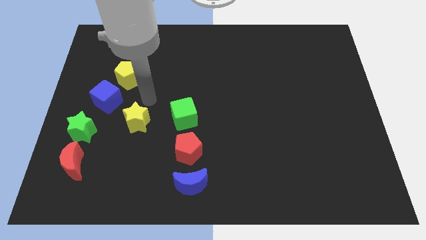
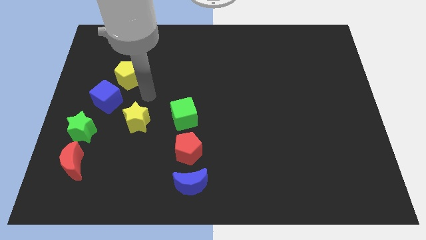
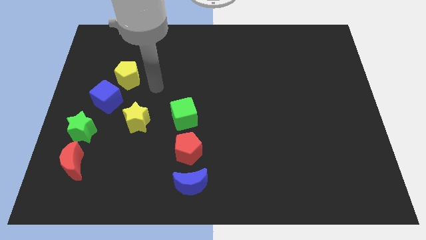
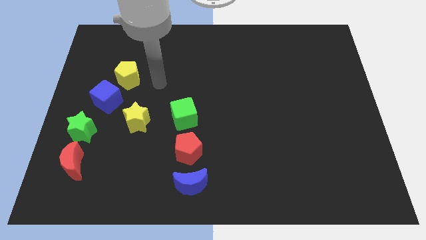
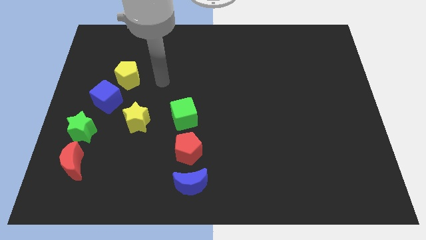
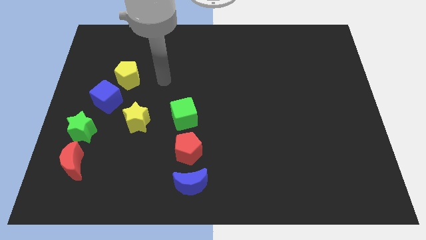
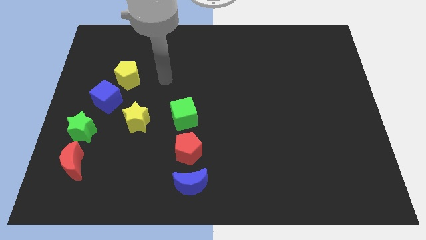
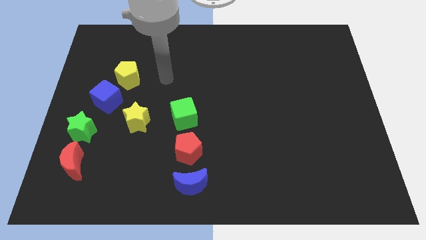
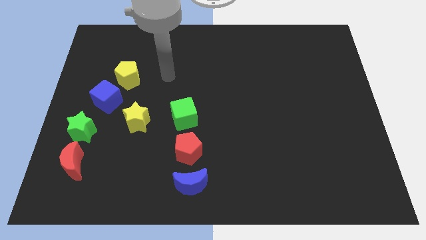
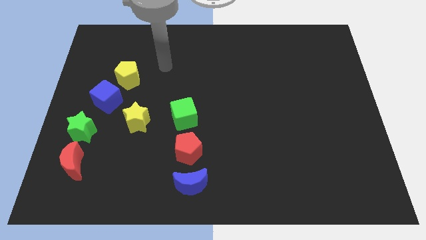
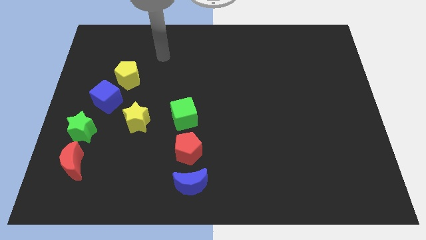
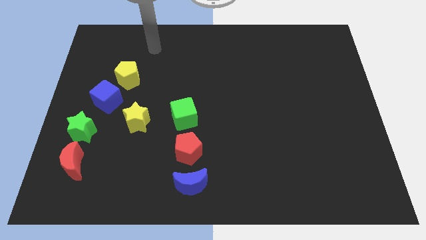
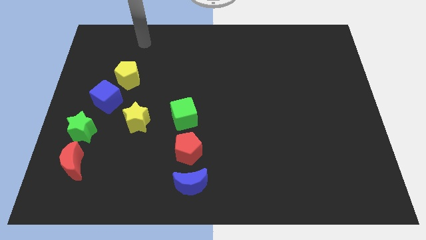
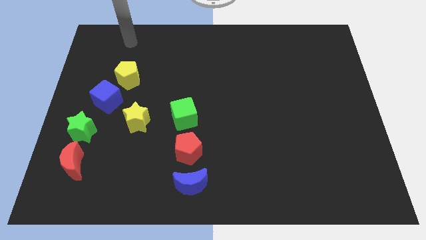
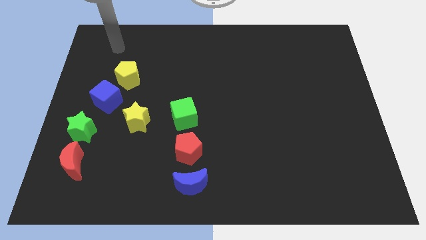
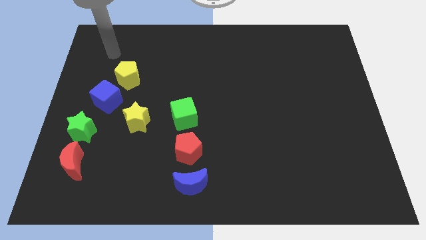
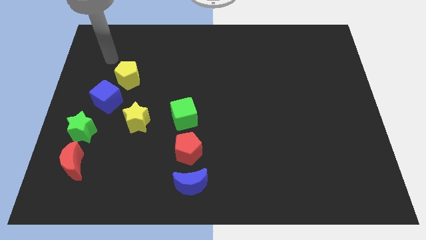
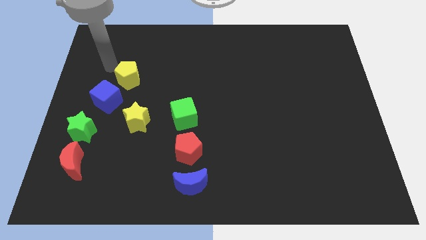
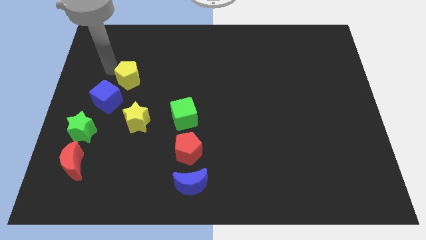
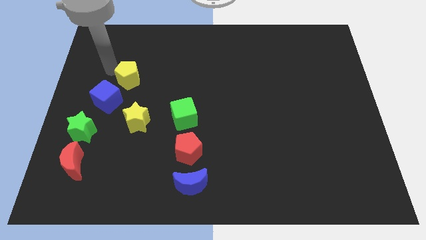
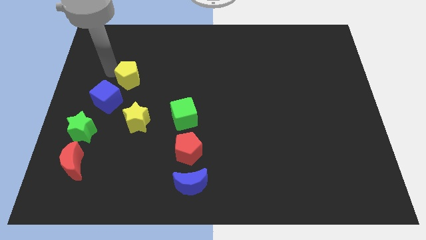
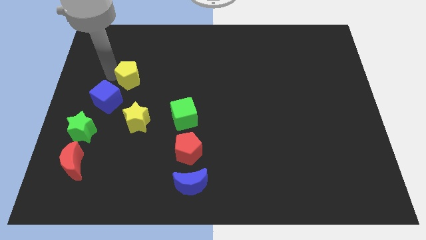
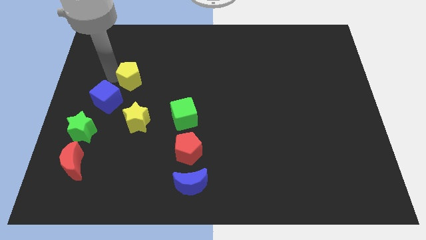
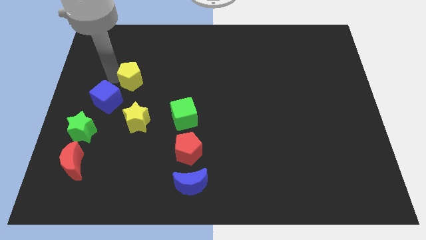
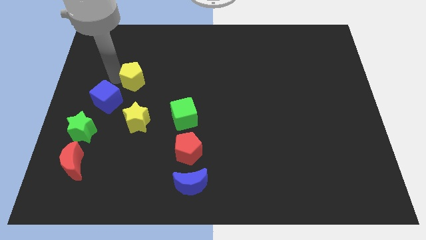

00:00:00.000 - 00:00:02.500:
slightly push the yellow pentagon towards the right side of the board

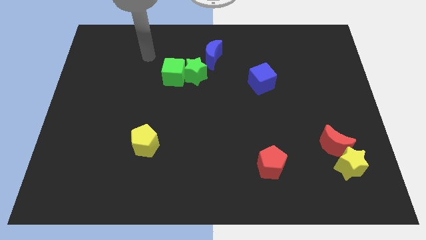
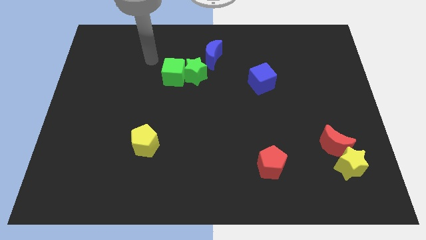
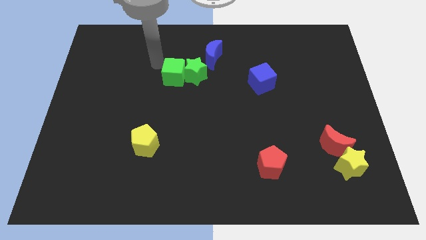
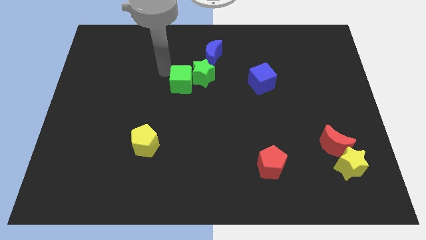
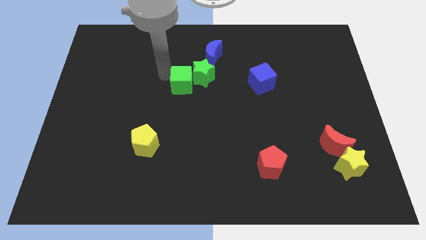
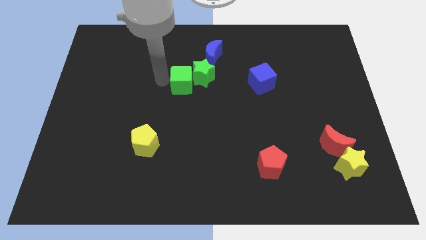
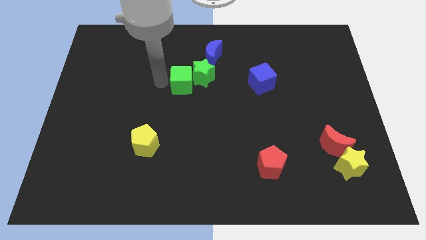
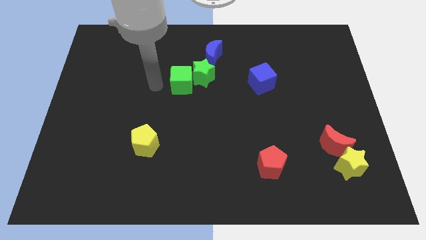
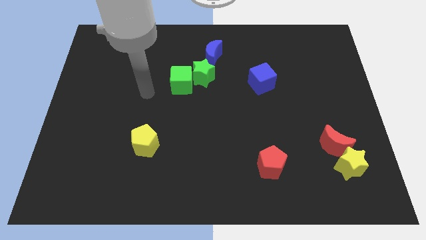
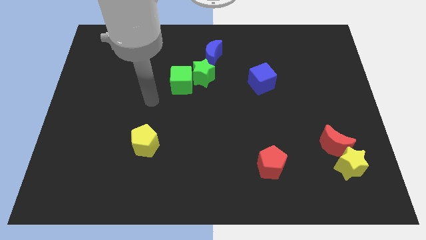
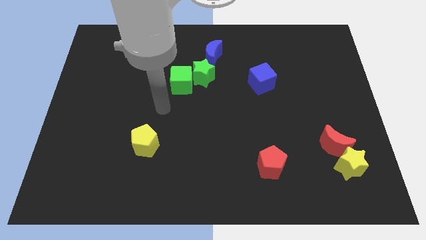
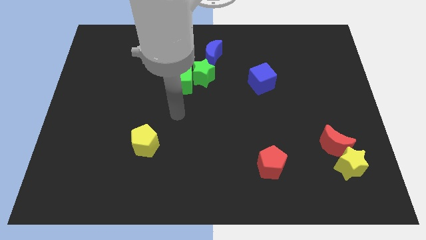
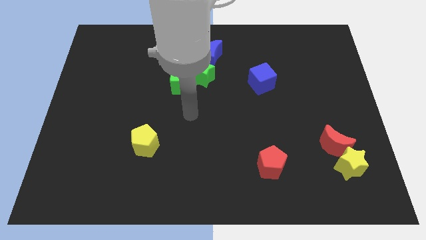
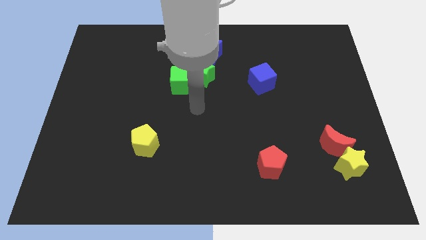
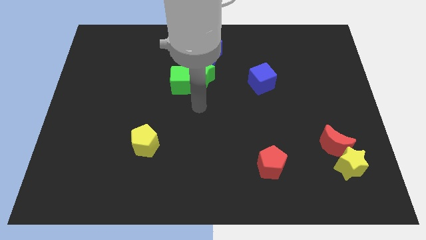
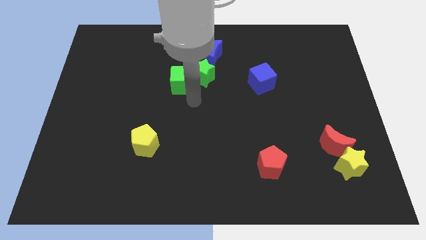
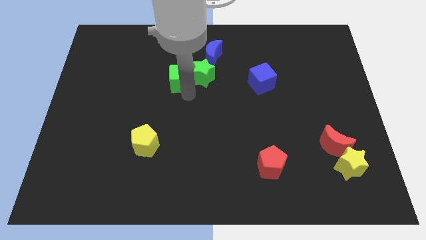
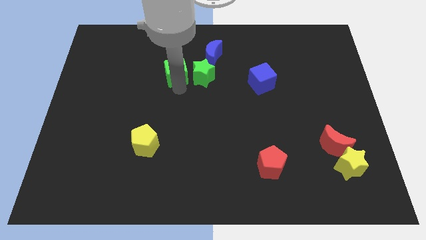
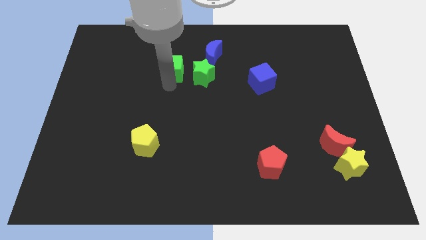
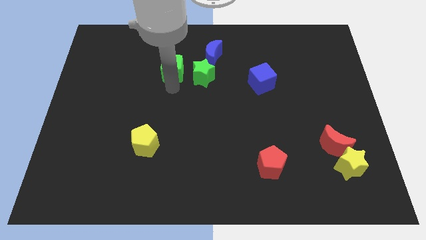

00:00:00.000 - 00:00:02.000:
separate the green cube and the green star

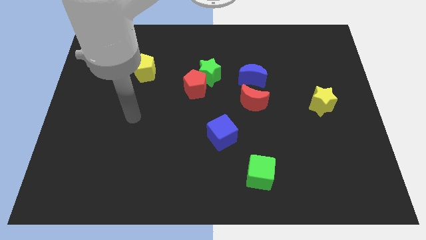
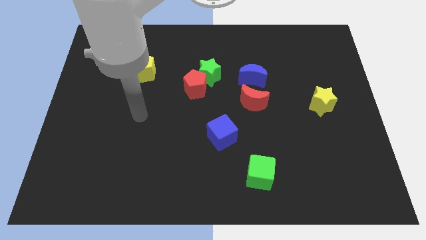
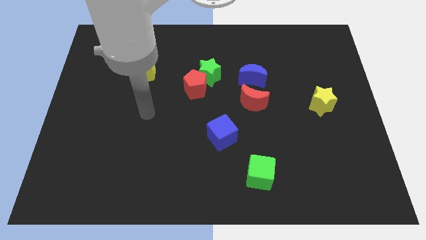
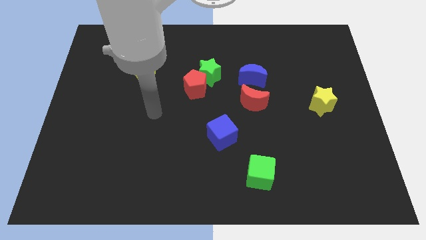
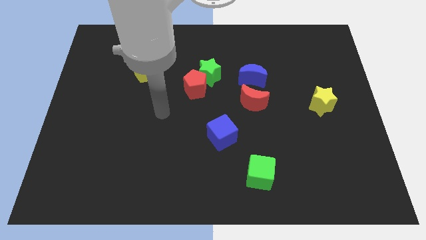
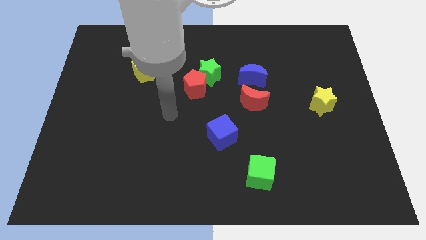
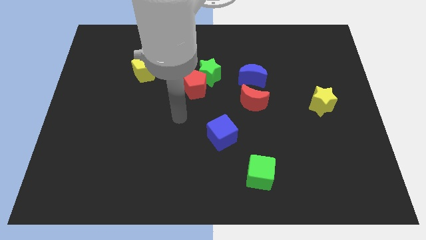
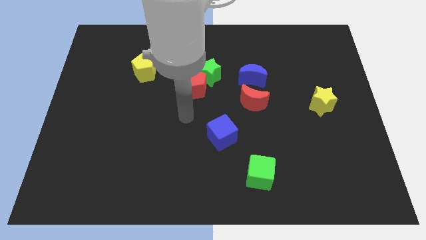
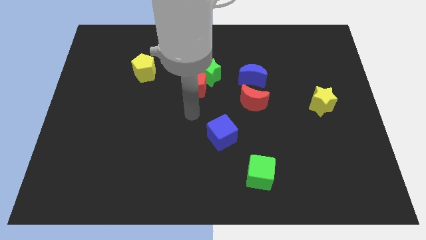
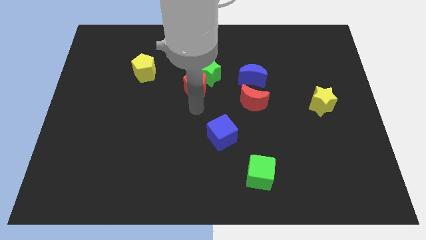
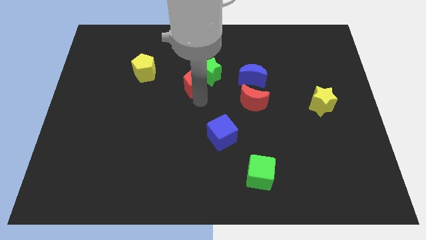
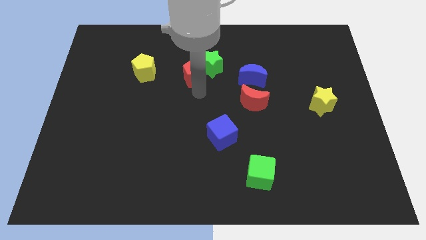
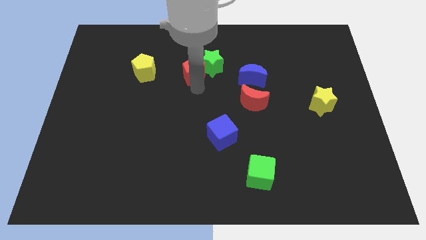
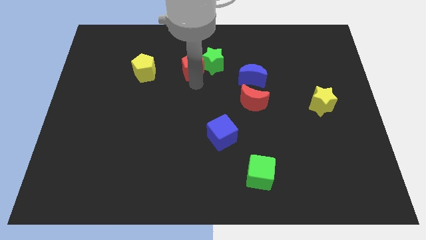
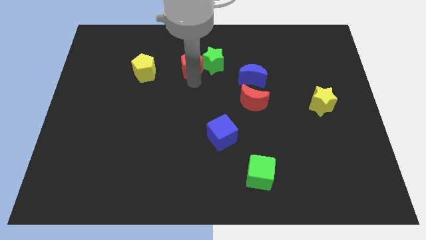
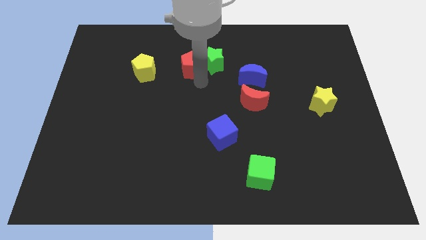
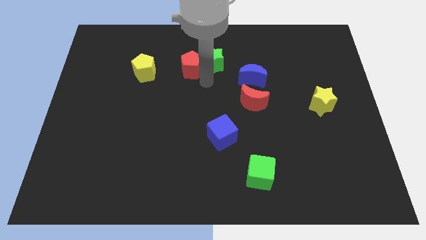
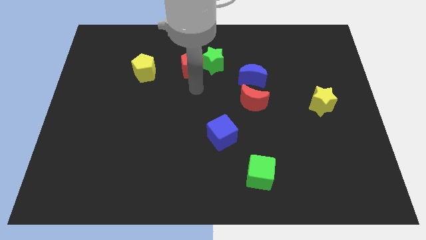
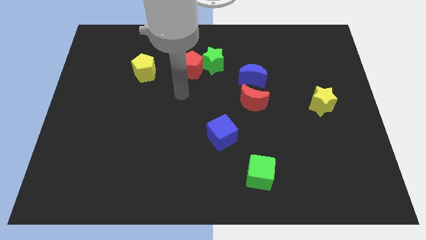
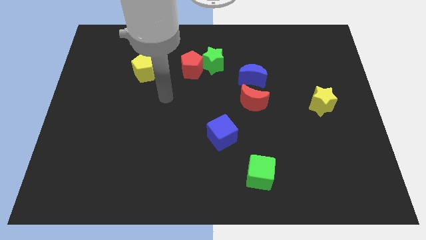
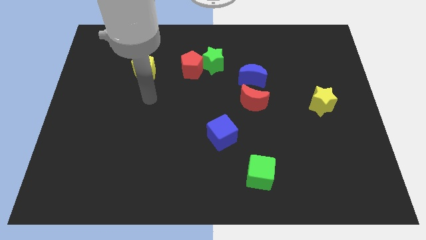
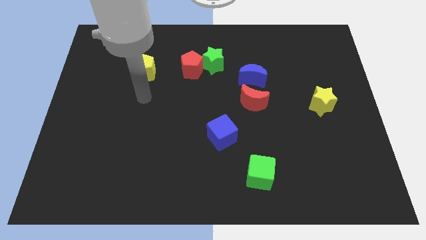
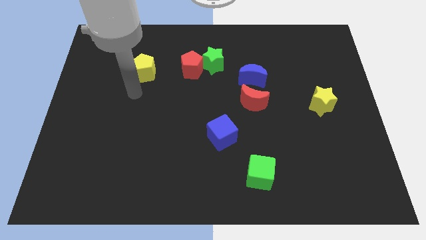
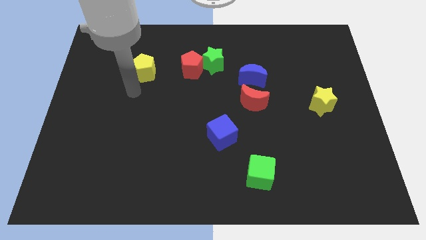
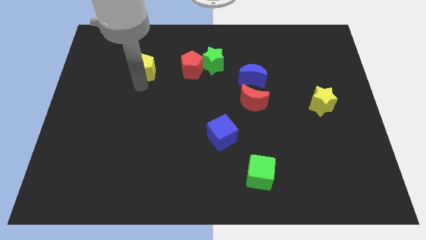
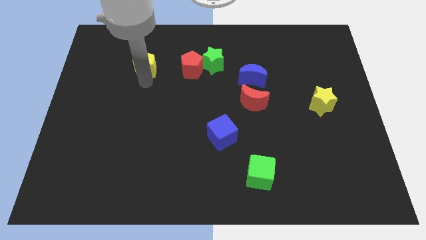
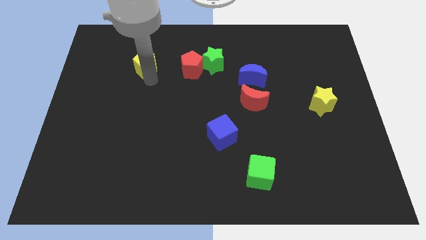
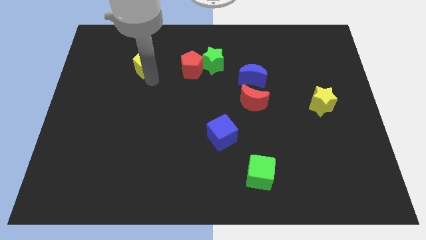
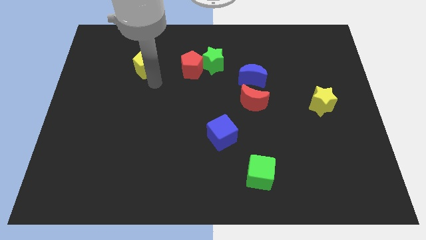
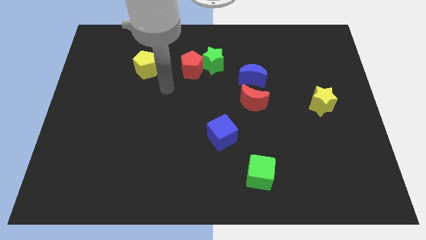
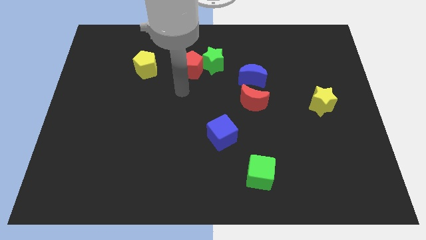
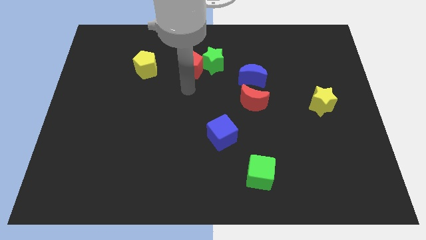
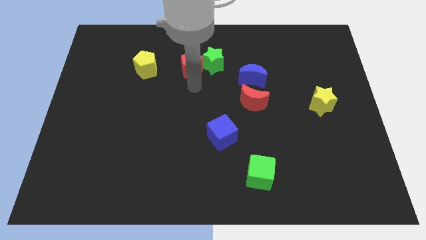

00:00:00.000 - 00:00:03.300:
push the red pentagon green star and yellow pentagon slightly to the top side of the board

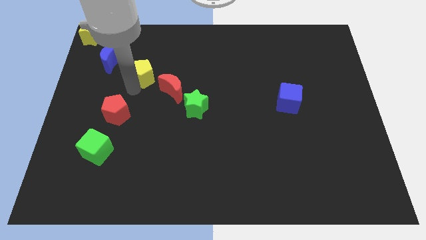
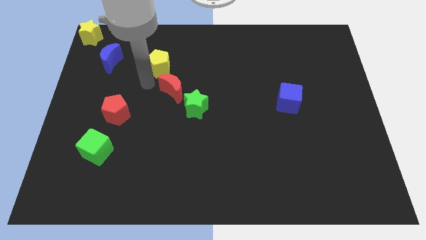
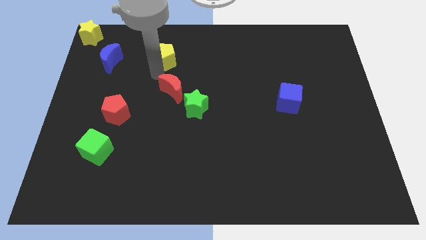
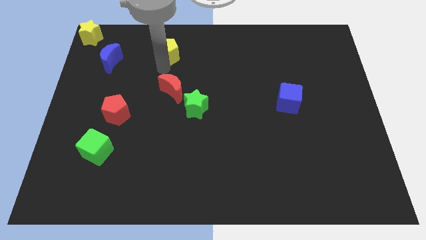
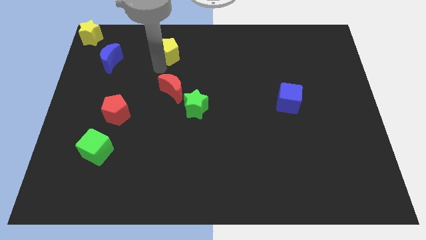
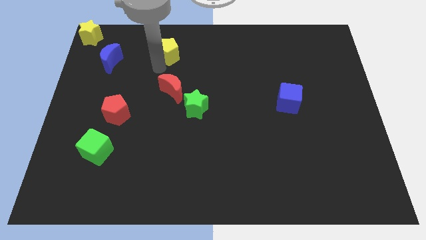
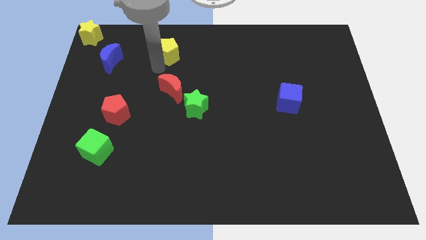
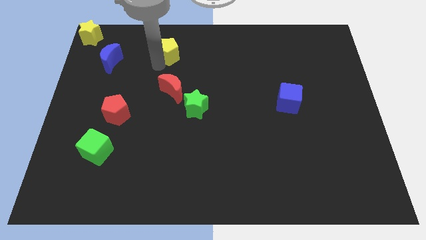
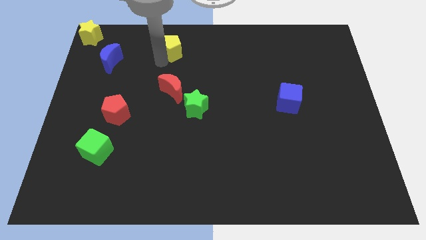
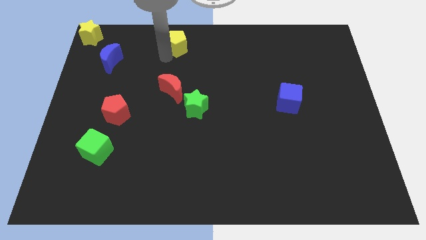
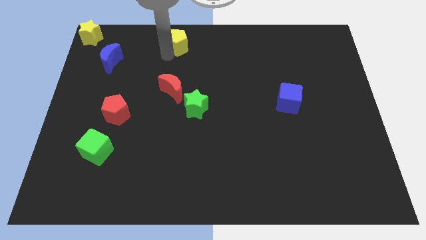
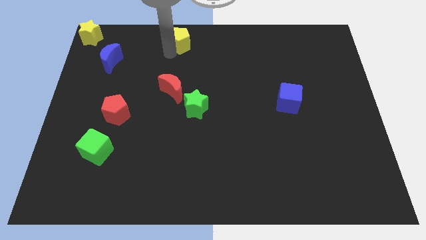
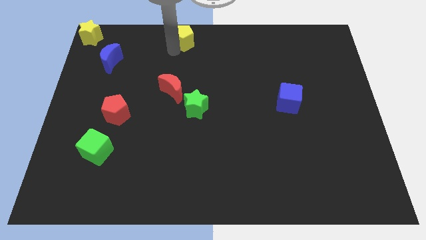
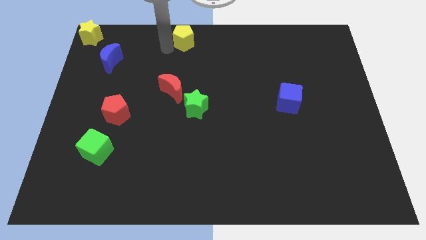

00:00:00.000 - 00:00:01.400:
place the yellow pentagon above the red moon
